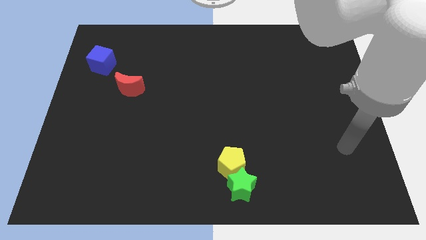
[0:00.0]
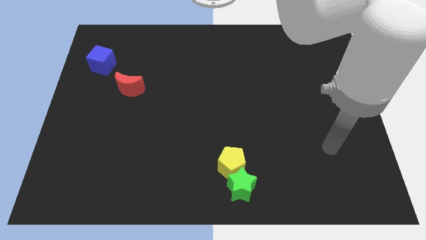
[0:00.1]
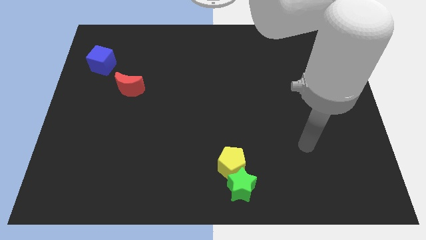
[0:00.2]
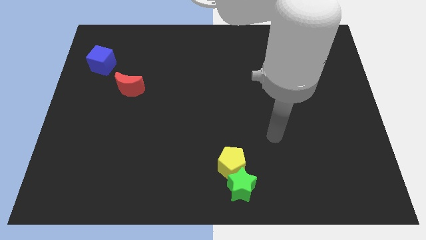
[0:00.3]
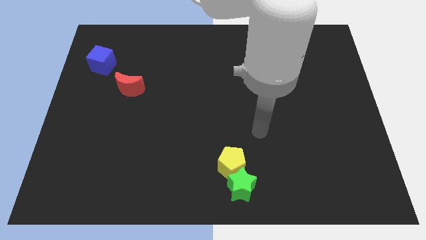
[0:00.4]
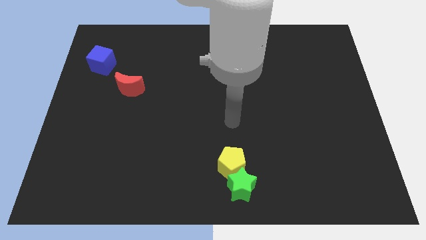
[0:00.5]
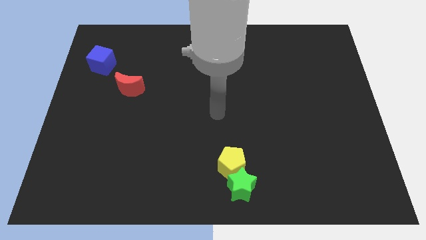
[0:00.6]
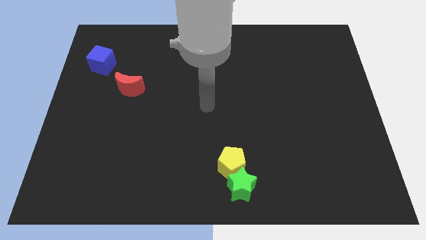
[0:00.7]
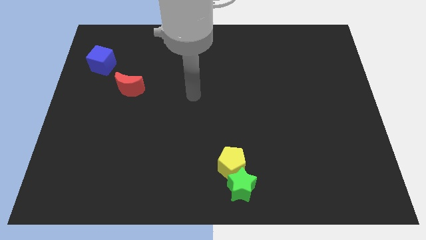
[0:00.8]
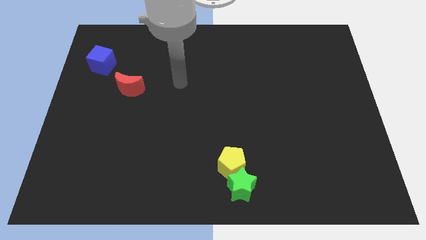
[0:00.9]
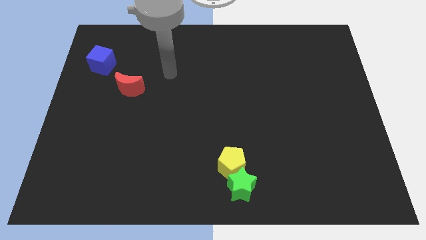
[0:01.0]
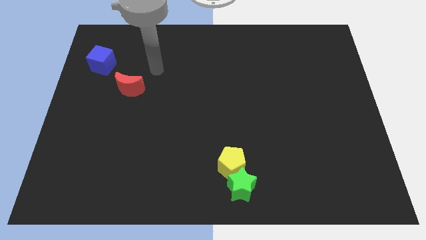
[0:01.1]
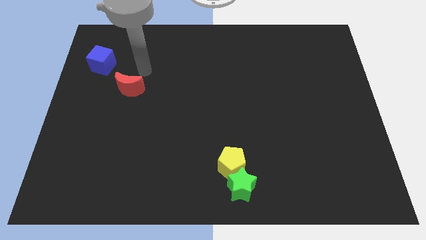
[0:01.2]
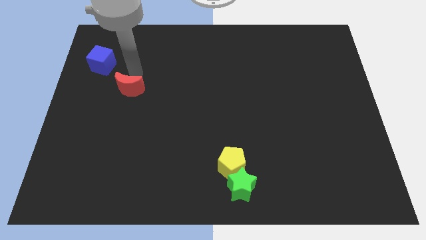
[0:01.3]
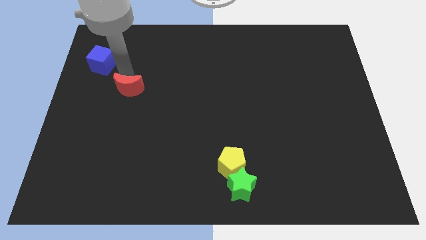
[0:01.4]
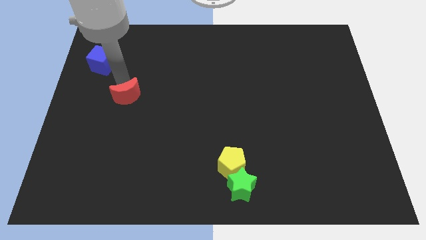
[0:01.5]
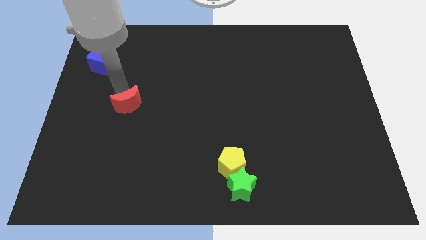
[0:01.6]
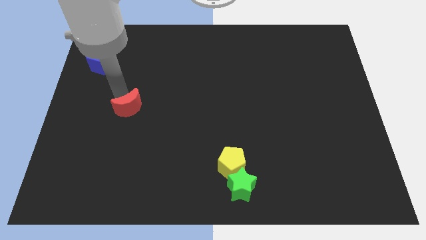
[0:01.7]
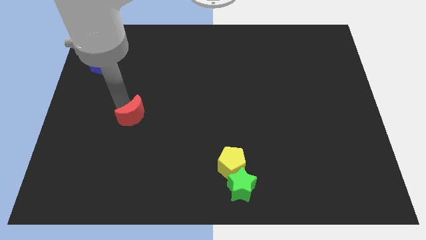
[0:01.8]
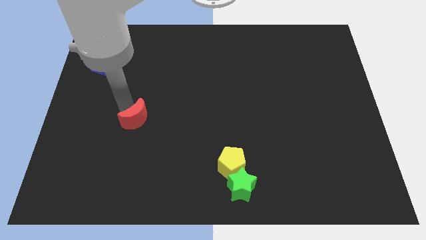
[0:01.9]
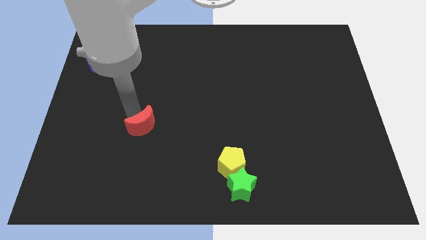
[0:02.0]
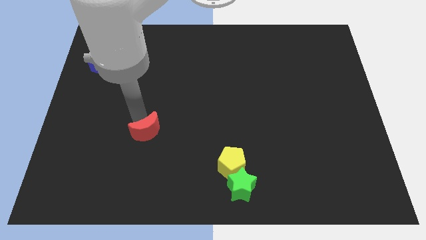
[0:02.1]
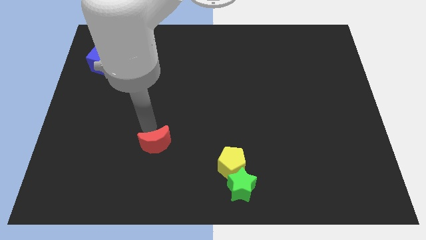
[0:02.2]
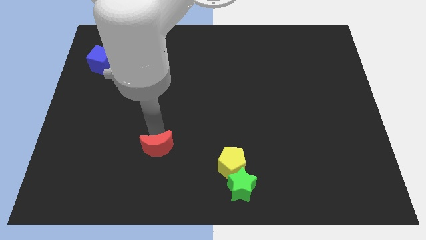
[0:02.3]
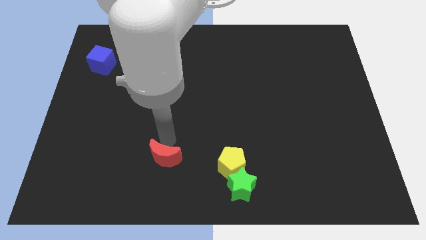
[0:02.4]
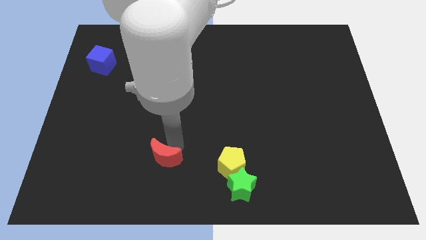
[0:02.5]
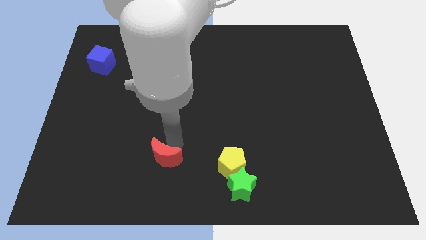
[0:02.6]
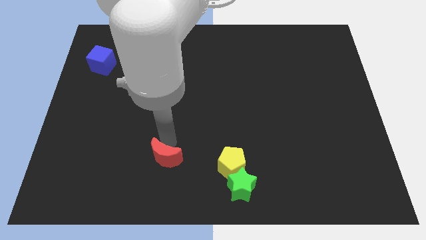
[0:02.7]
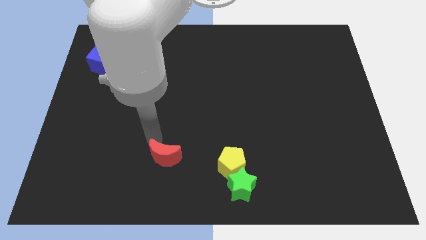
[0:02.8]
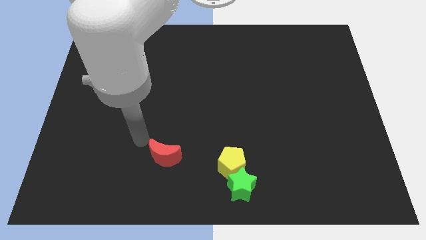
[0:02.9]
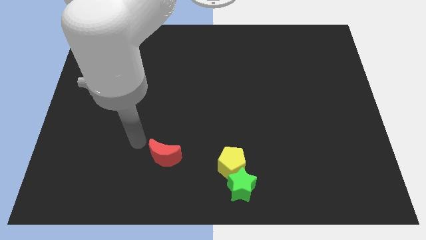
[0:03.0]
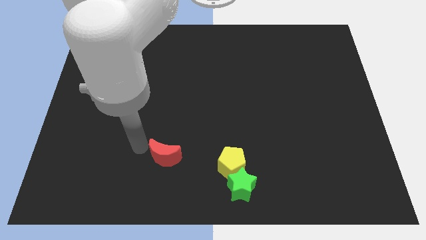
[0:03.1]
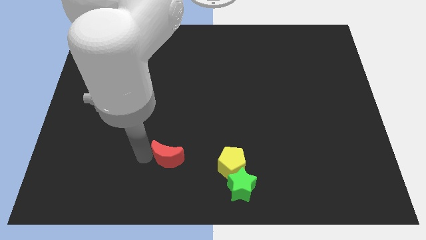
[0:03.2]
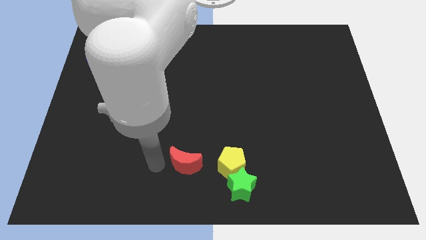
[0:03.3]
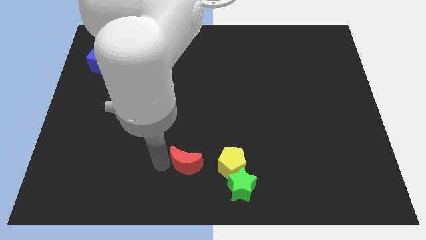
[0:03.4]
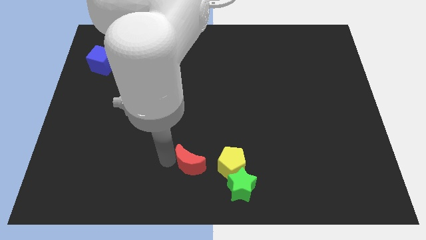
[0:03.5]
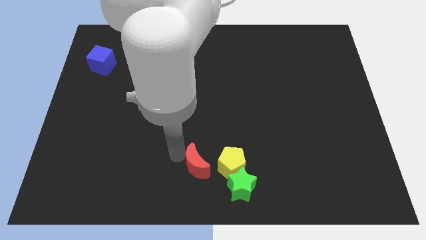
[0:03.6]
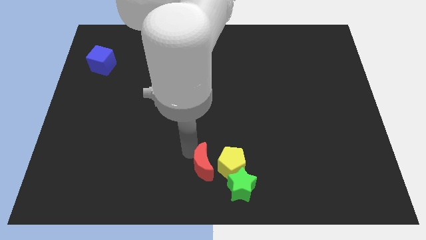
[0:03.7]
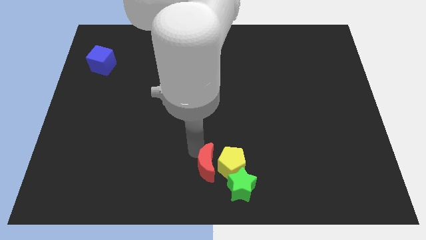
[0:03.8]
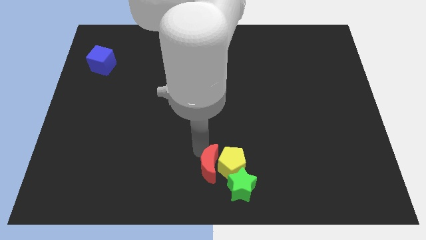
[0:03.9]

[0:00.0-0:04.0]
move the moon close to the yellow block

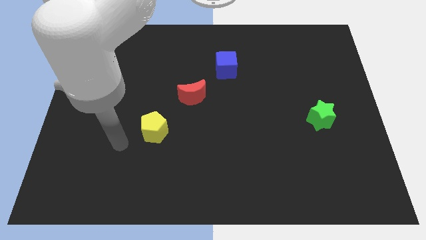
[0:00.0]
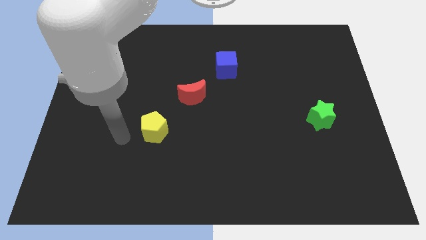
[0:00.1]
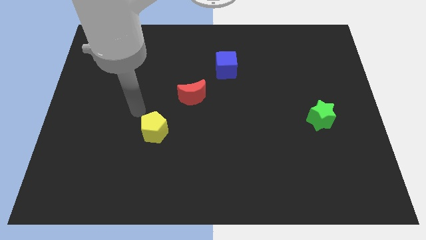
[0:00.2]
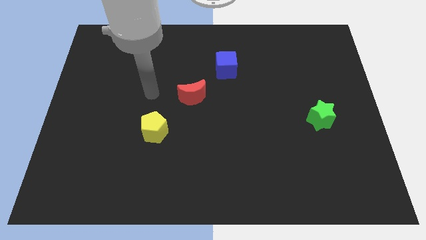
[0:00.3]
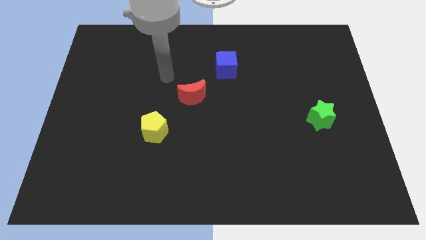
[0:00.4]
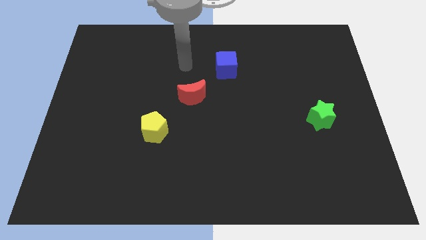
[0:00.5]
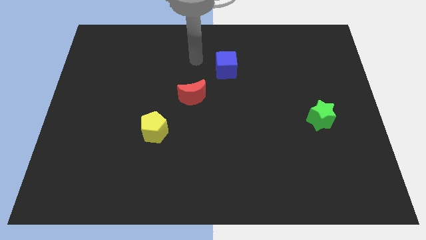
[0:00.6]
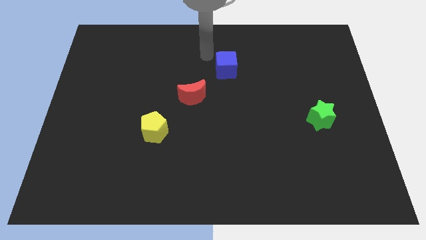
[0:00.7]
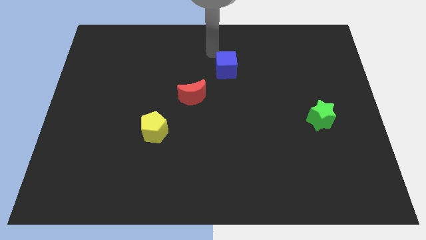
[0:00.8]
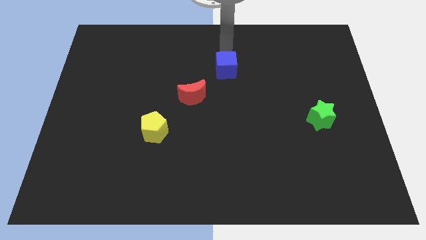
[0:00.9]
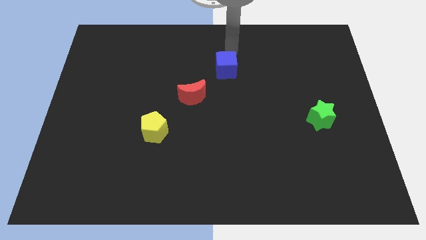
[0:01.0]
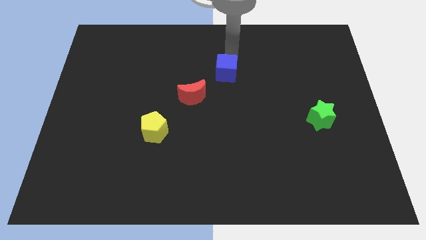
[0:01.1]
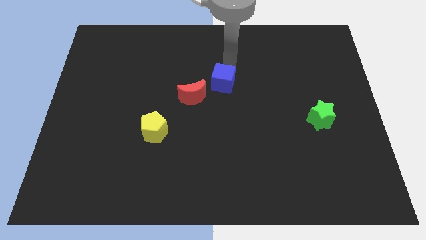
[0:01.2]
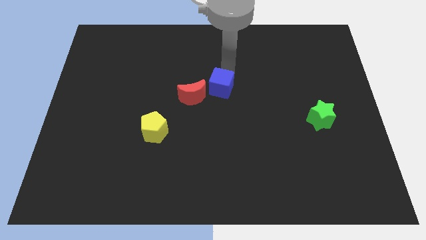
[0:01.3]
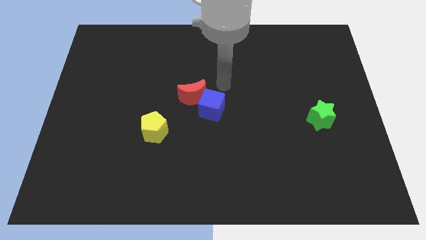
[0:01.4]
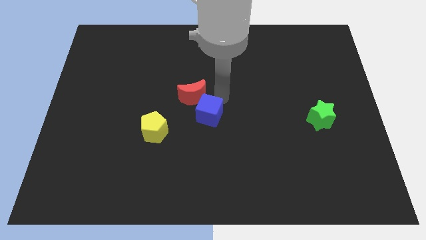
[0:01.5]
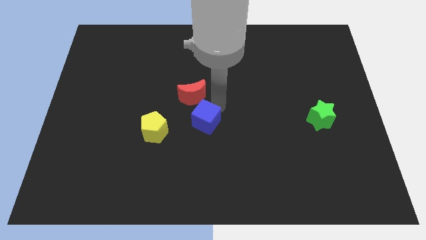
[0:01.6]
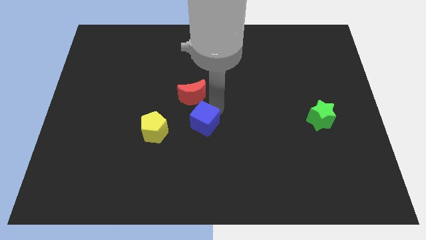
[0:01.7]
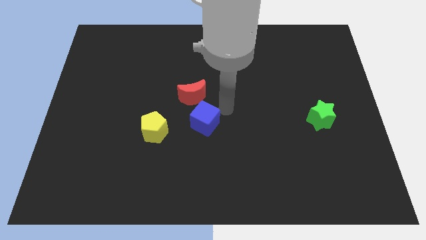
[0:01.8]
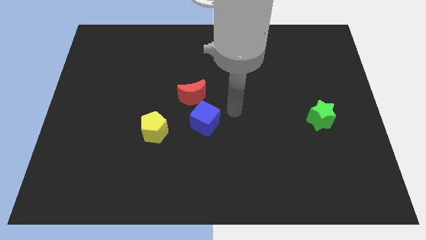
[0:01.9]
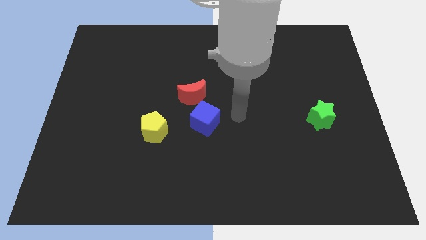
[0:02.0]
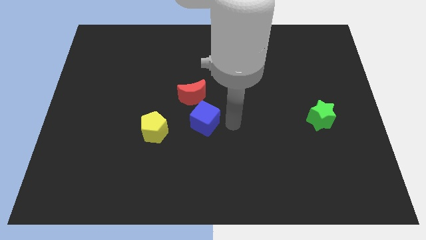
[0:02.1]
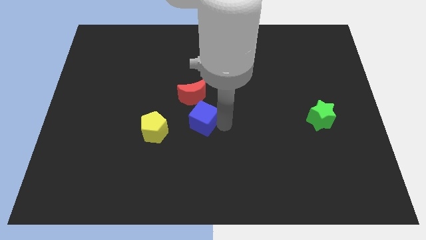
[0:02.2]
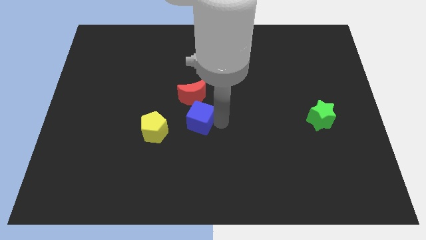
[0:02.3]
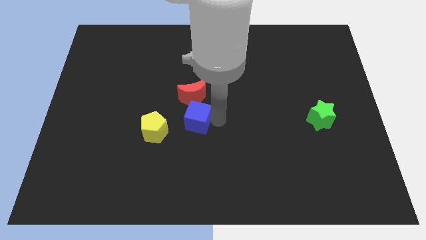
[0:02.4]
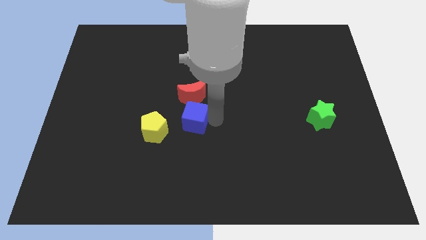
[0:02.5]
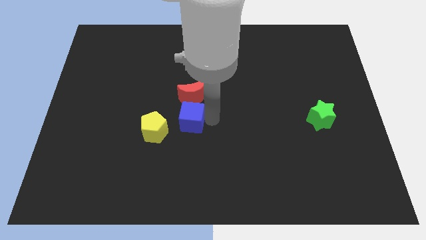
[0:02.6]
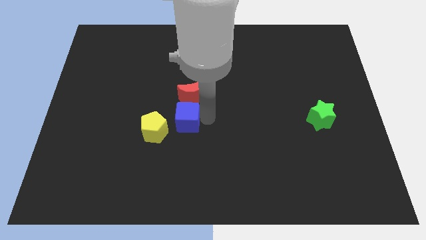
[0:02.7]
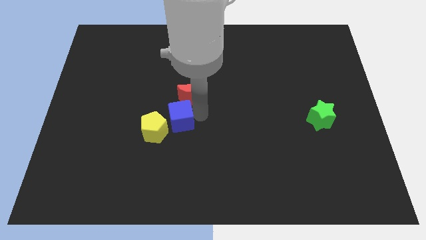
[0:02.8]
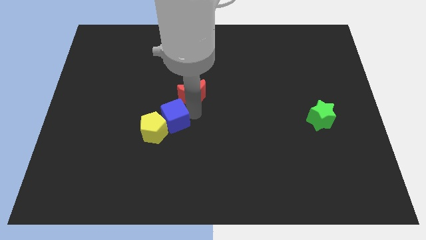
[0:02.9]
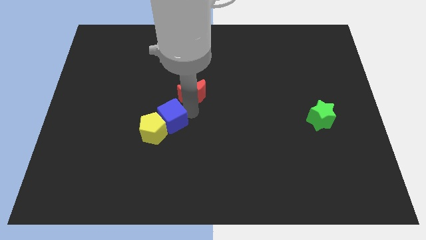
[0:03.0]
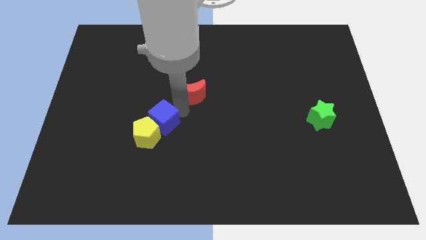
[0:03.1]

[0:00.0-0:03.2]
push the blue cube towards the yellow block

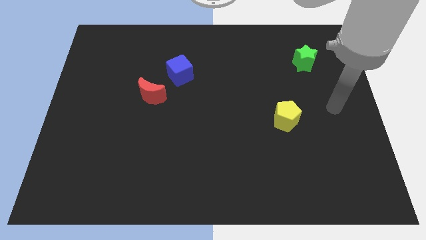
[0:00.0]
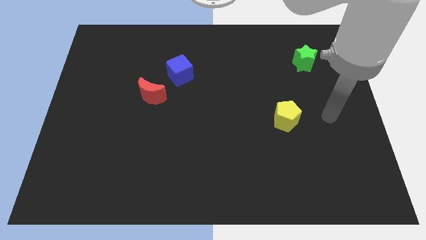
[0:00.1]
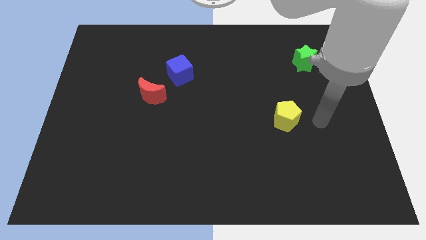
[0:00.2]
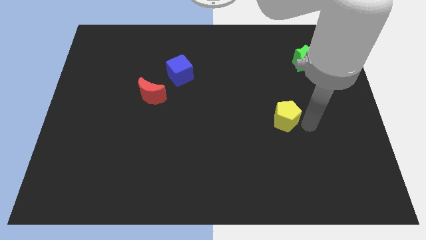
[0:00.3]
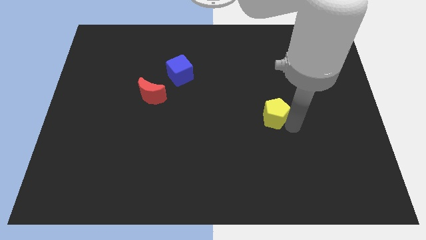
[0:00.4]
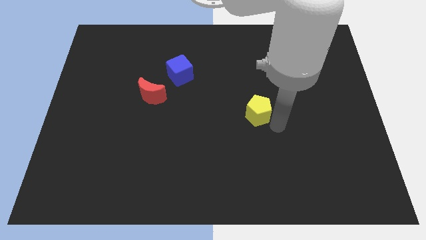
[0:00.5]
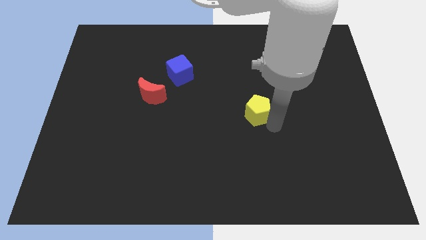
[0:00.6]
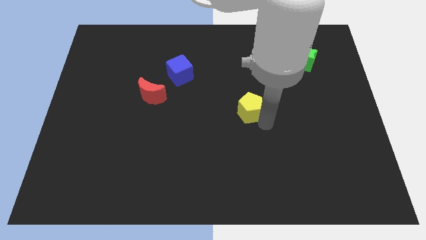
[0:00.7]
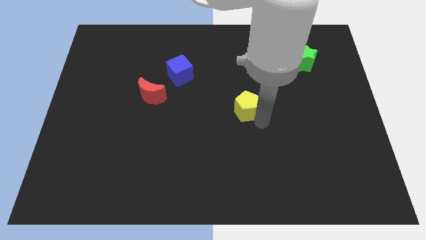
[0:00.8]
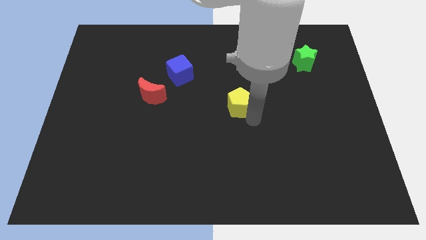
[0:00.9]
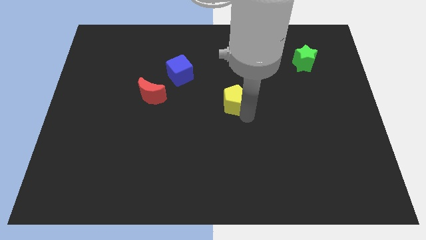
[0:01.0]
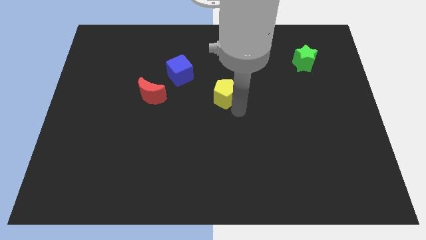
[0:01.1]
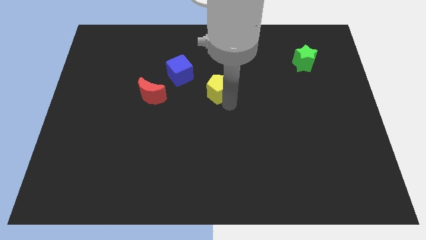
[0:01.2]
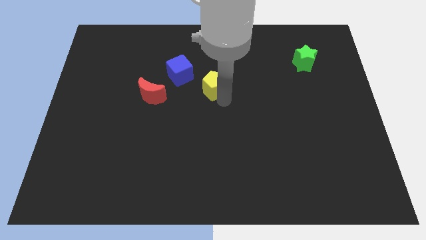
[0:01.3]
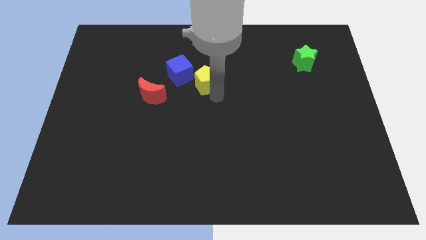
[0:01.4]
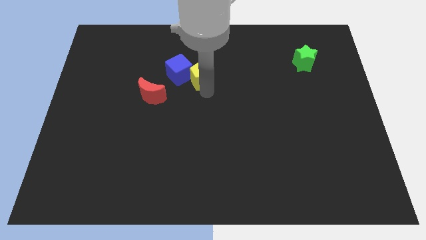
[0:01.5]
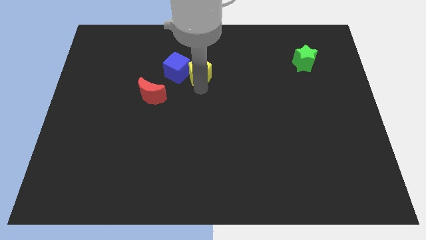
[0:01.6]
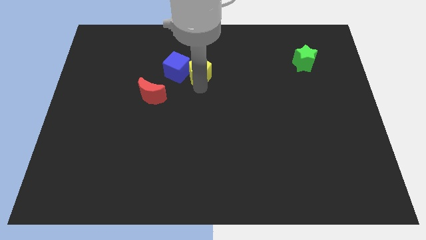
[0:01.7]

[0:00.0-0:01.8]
push the yellow pentagon to the blue cube
